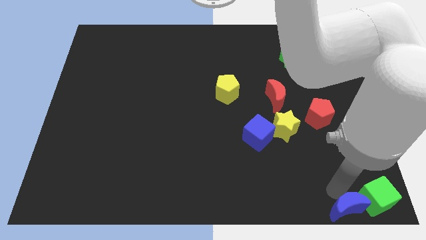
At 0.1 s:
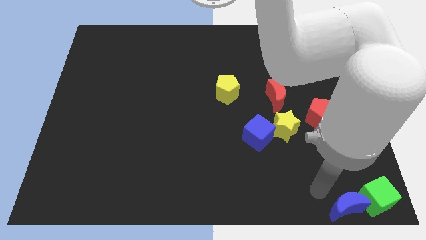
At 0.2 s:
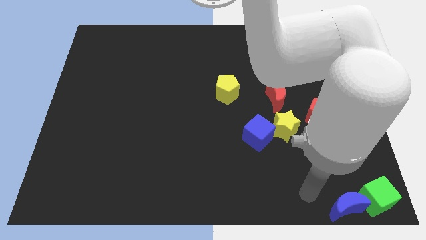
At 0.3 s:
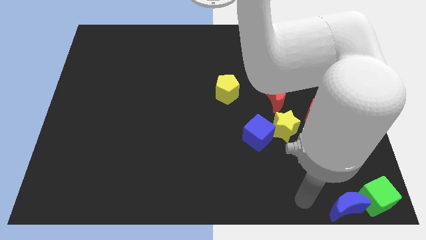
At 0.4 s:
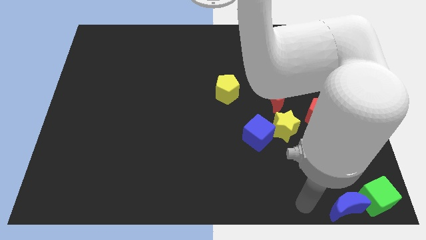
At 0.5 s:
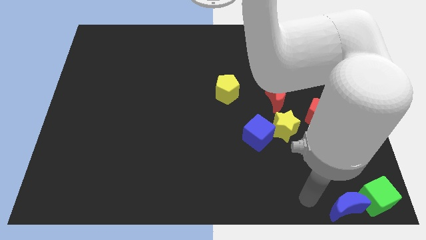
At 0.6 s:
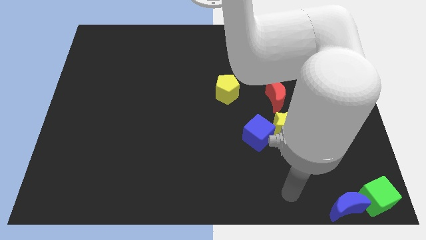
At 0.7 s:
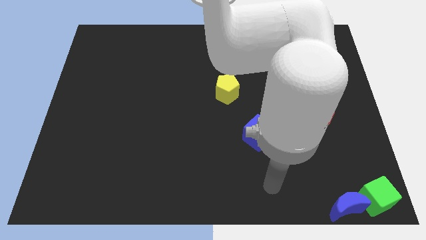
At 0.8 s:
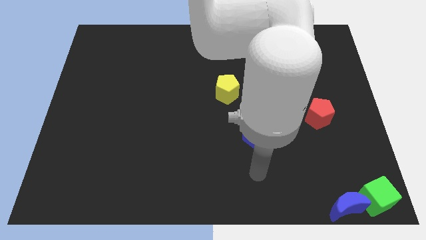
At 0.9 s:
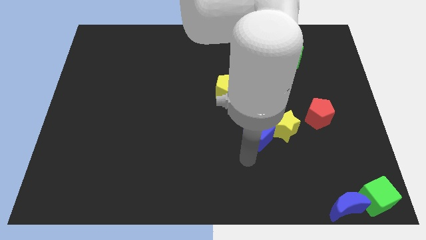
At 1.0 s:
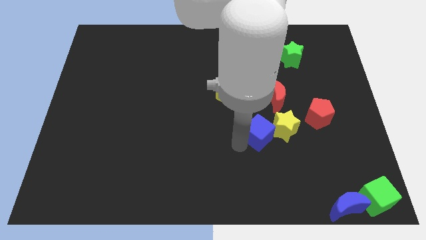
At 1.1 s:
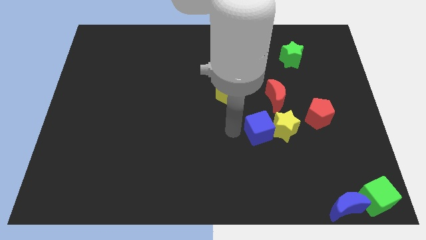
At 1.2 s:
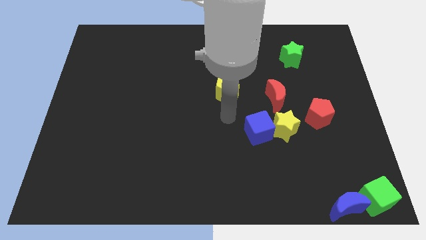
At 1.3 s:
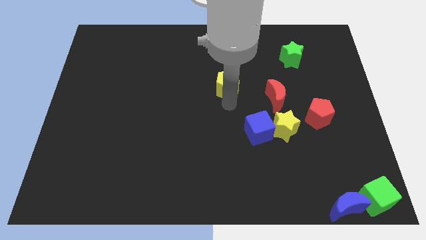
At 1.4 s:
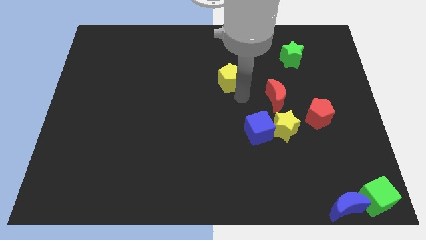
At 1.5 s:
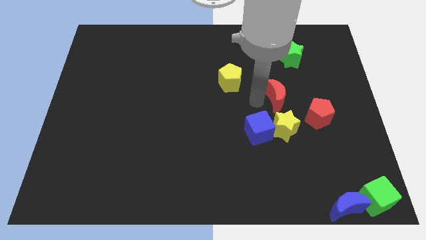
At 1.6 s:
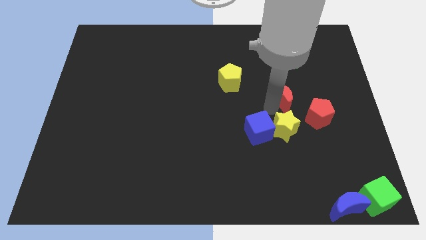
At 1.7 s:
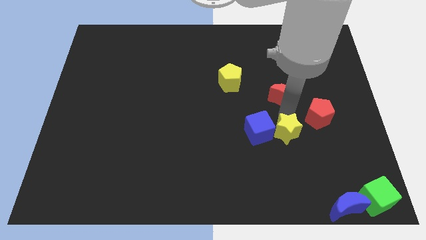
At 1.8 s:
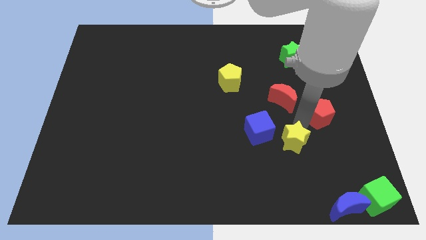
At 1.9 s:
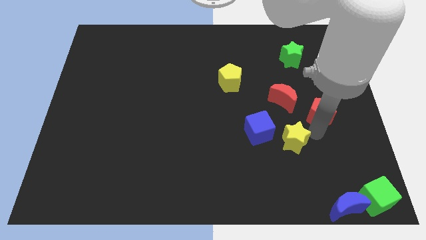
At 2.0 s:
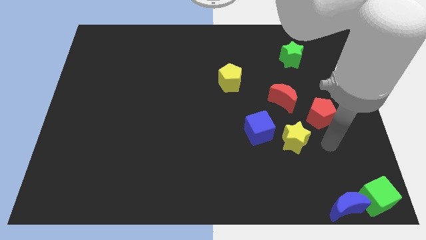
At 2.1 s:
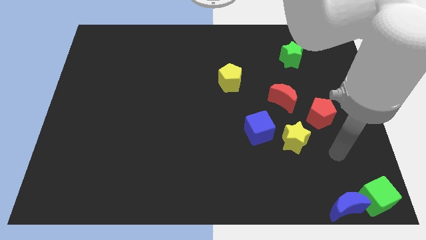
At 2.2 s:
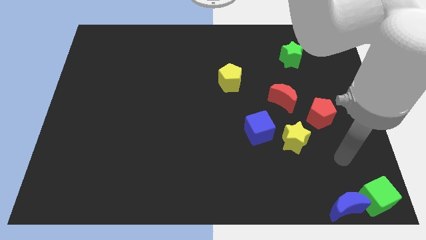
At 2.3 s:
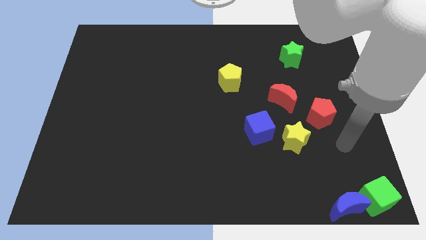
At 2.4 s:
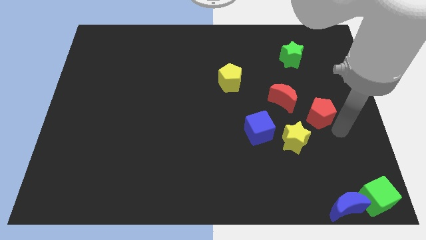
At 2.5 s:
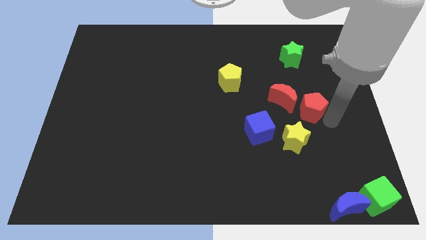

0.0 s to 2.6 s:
separate the blue cube and yellow star

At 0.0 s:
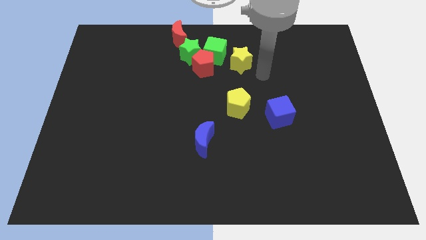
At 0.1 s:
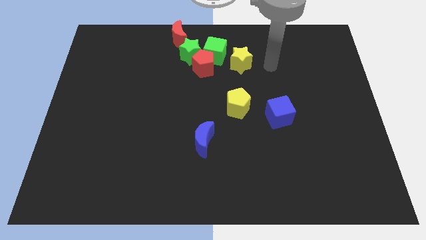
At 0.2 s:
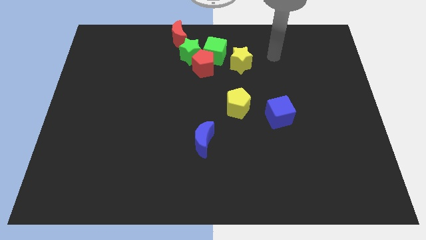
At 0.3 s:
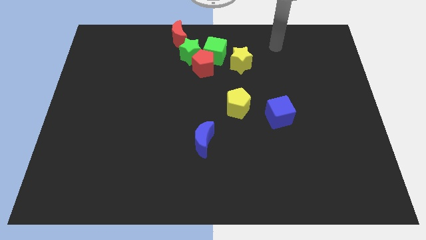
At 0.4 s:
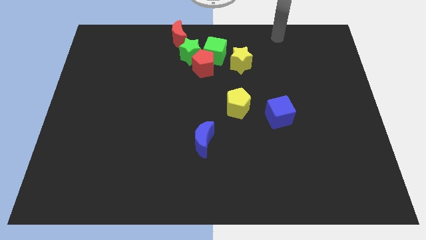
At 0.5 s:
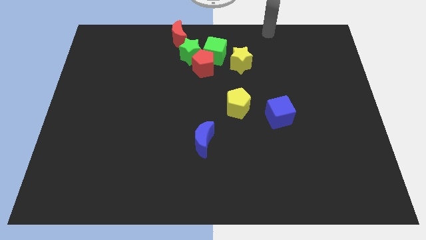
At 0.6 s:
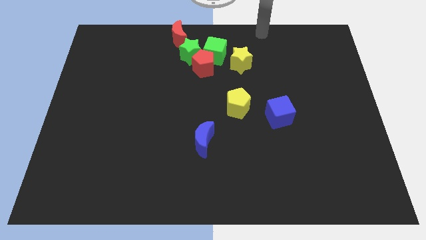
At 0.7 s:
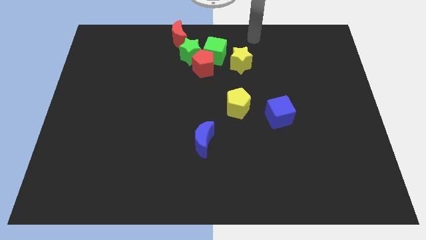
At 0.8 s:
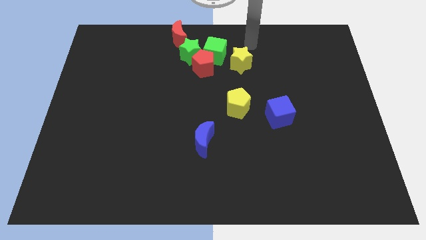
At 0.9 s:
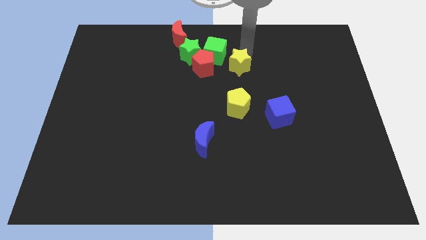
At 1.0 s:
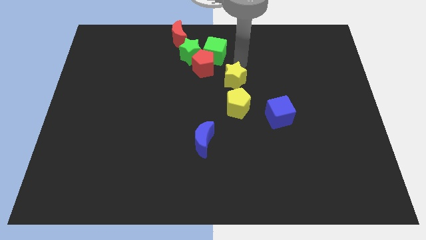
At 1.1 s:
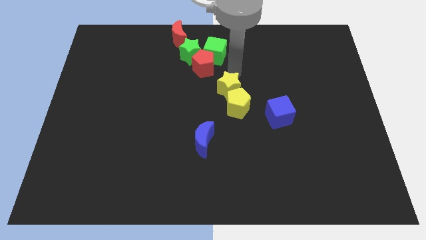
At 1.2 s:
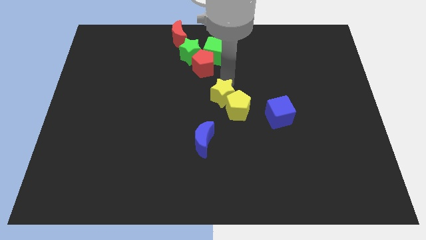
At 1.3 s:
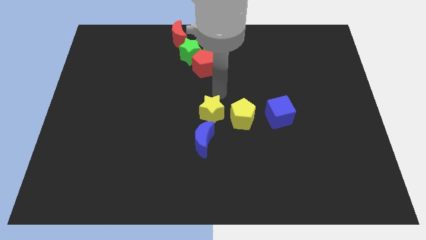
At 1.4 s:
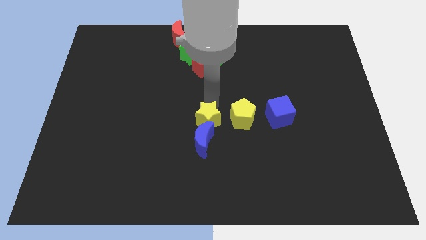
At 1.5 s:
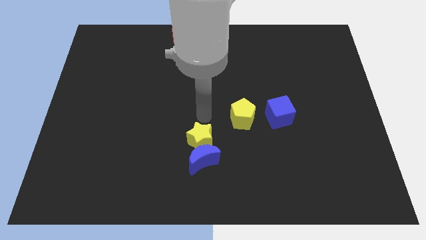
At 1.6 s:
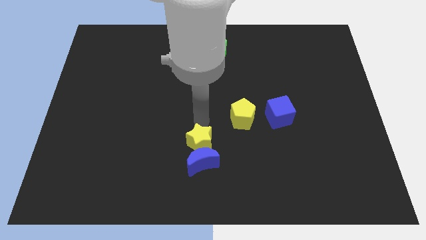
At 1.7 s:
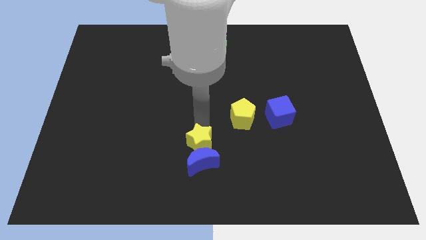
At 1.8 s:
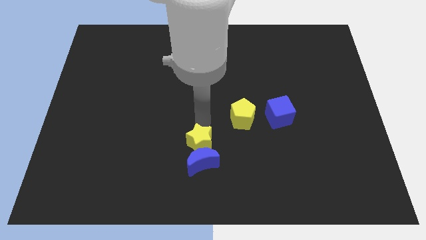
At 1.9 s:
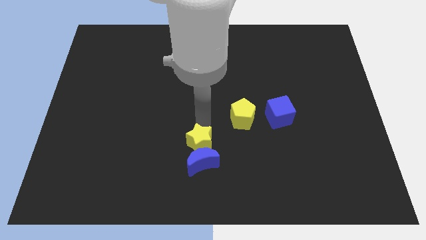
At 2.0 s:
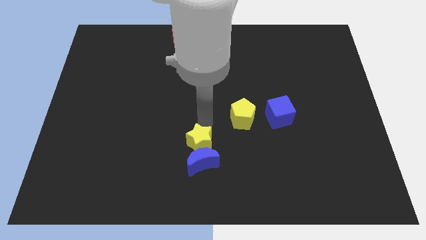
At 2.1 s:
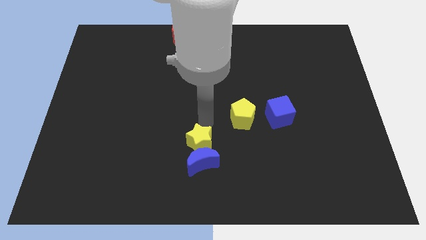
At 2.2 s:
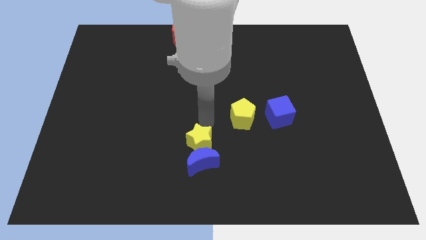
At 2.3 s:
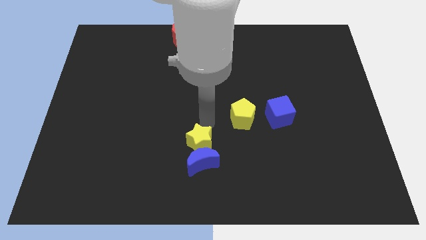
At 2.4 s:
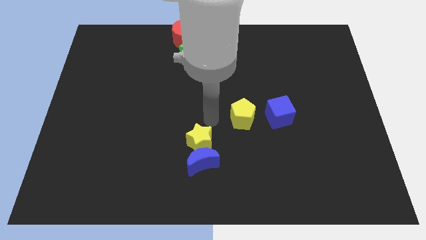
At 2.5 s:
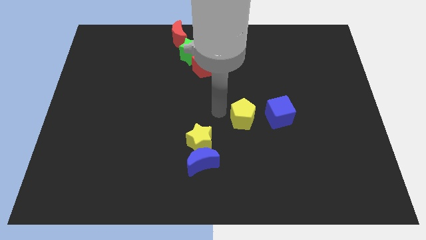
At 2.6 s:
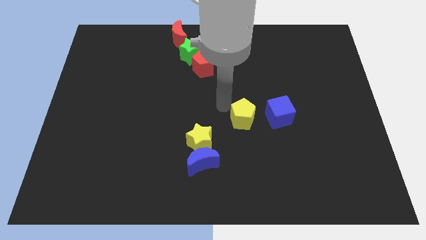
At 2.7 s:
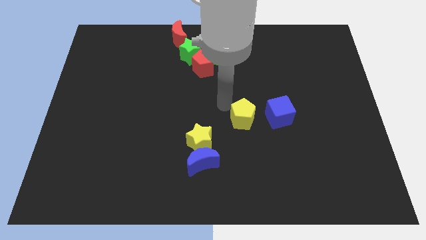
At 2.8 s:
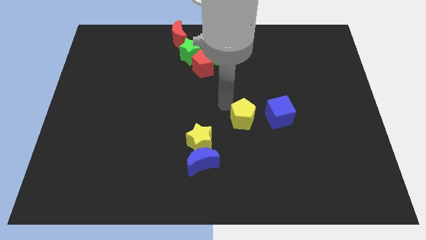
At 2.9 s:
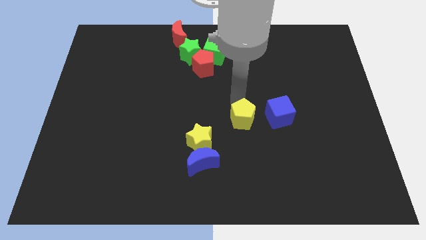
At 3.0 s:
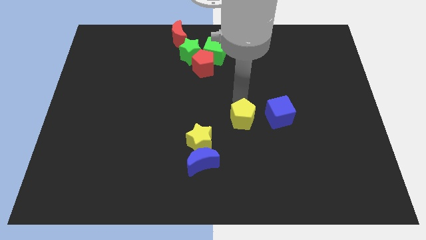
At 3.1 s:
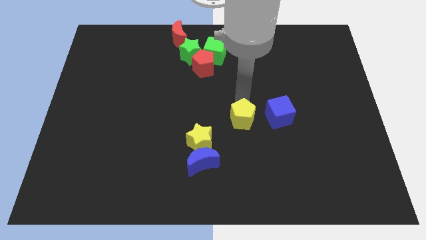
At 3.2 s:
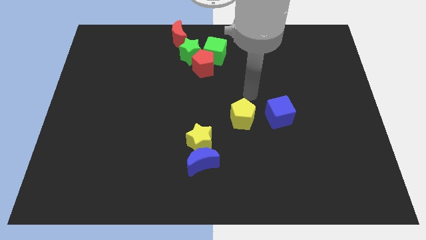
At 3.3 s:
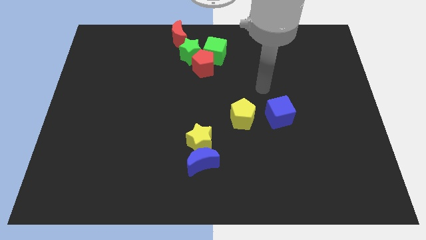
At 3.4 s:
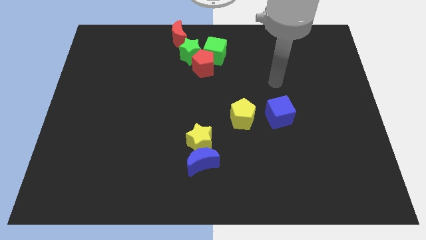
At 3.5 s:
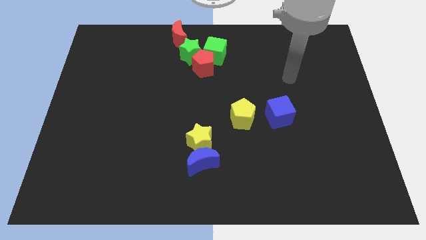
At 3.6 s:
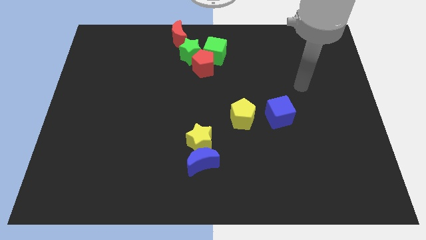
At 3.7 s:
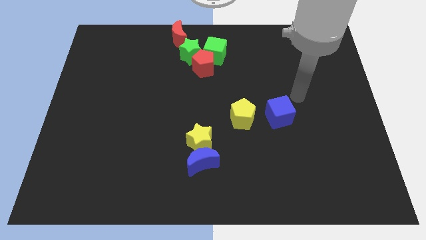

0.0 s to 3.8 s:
place the yellow star above the blue crescent

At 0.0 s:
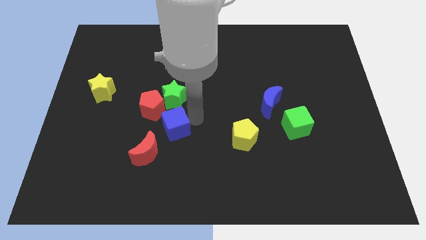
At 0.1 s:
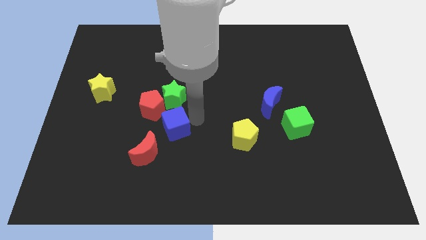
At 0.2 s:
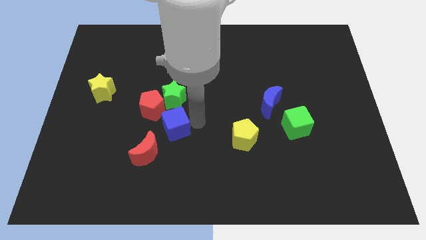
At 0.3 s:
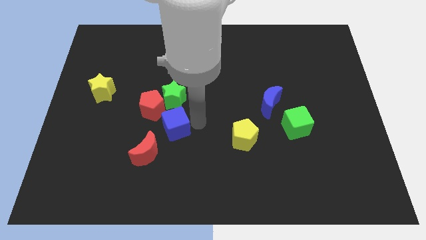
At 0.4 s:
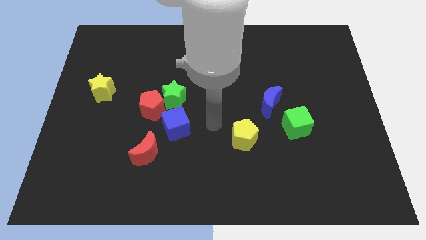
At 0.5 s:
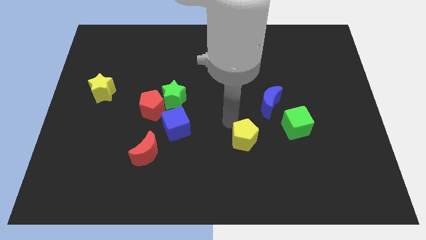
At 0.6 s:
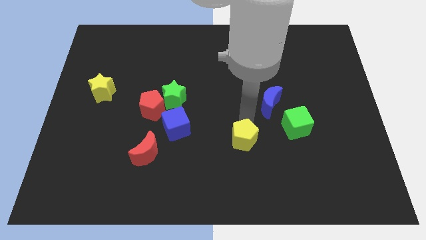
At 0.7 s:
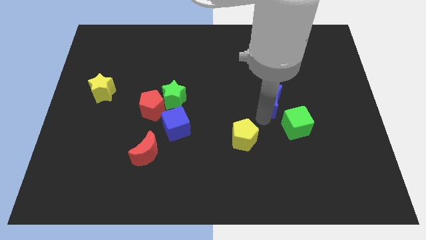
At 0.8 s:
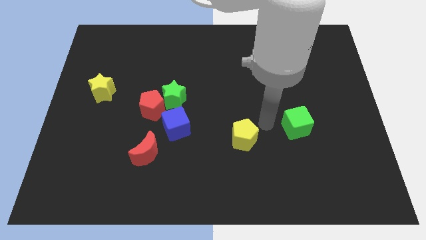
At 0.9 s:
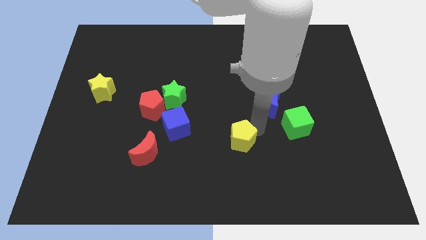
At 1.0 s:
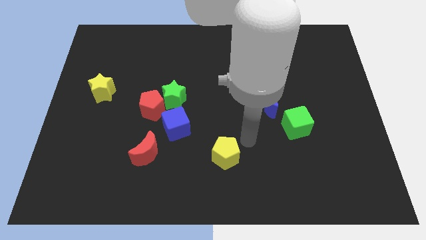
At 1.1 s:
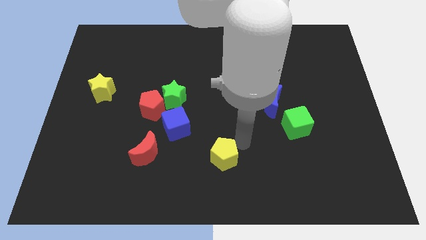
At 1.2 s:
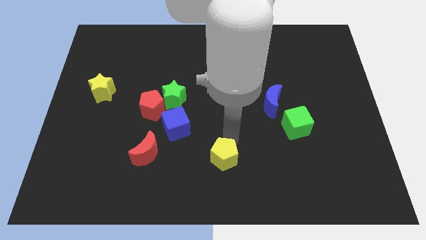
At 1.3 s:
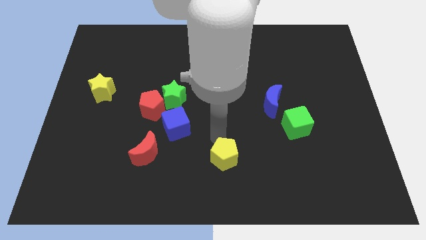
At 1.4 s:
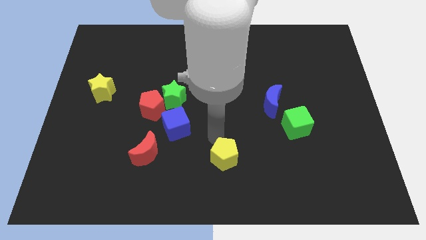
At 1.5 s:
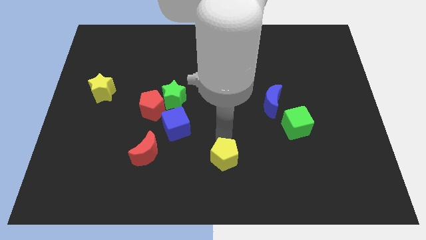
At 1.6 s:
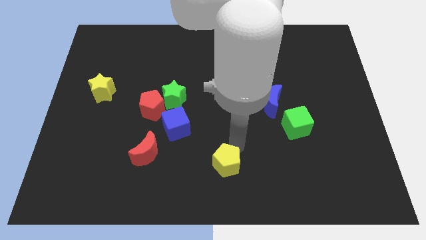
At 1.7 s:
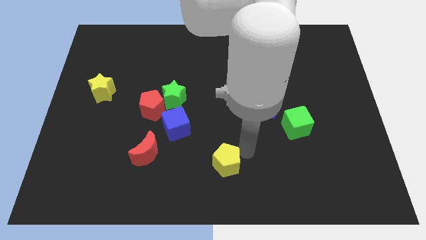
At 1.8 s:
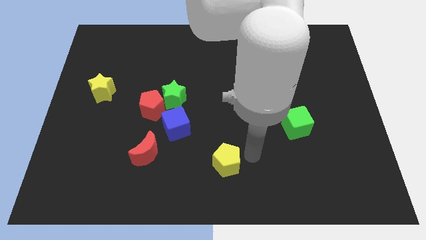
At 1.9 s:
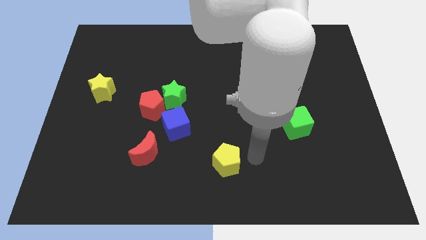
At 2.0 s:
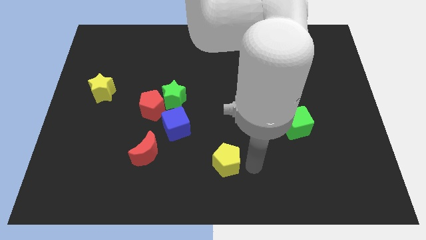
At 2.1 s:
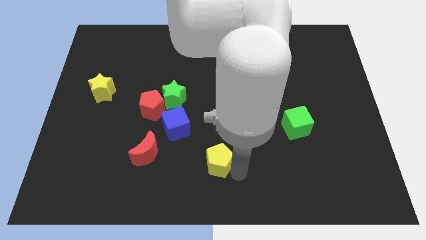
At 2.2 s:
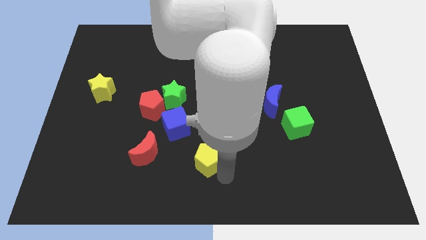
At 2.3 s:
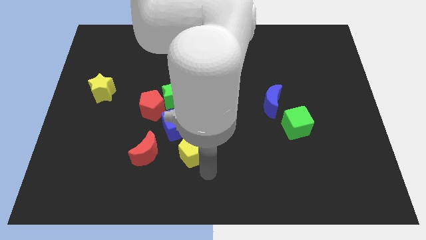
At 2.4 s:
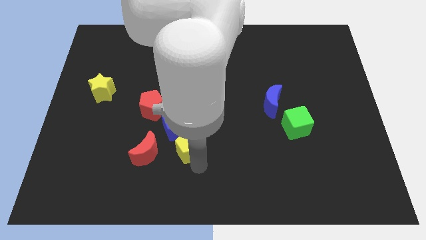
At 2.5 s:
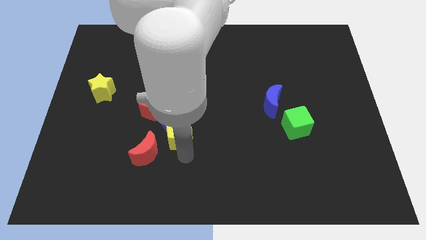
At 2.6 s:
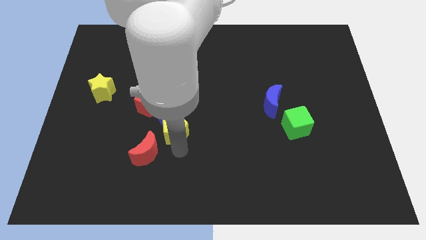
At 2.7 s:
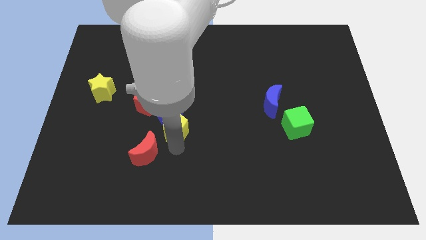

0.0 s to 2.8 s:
place yellow pentagon below blue cube
